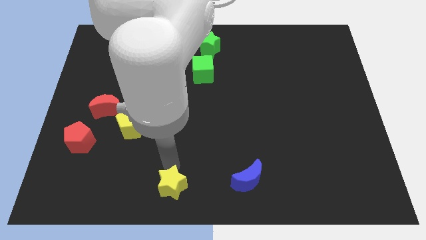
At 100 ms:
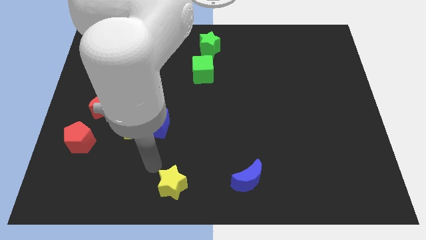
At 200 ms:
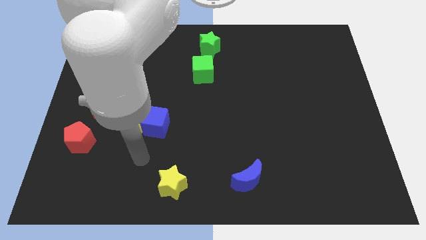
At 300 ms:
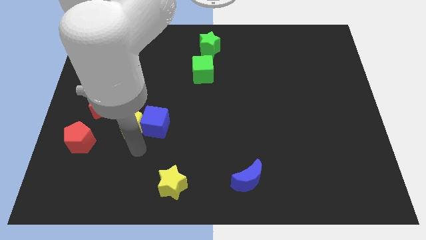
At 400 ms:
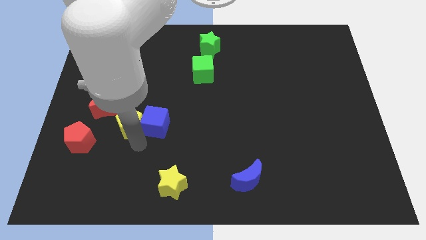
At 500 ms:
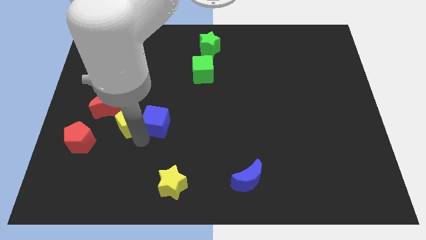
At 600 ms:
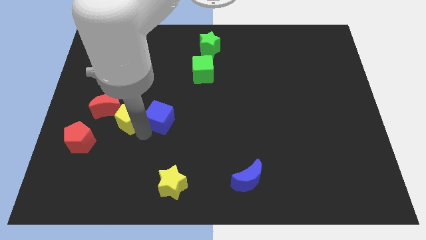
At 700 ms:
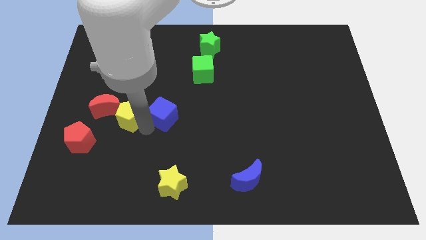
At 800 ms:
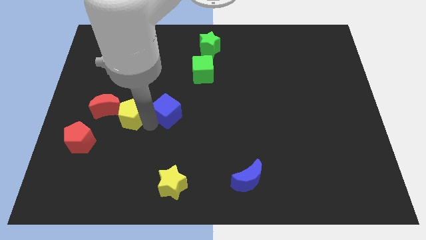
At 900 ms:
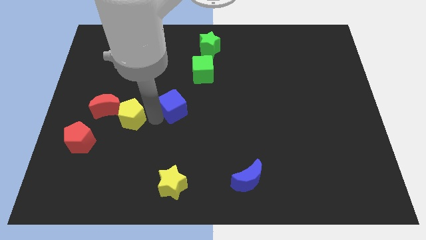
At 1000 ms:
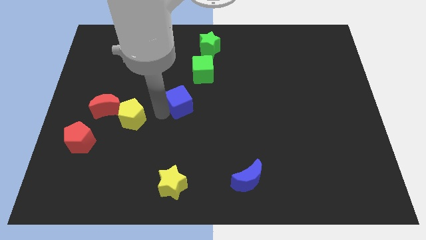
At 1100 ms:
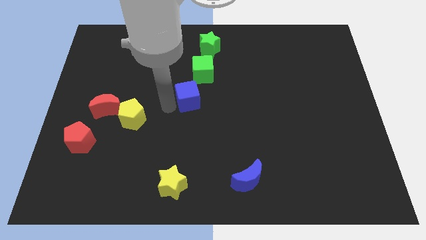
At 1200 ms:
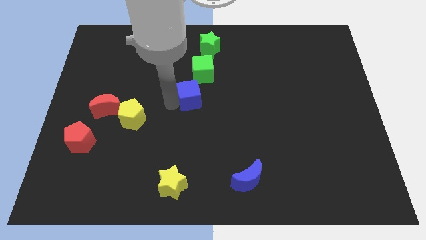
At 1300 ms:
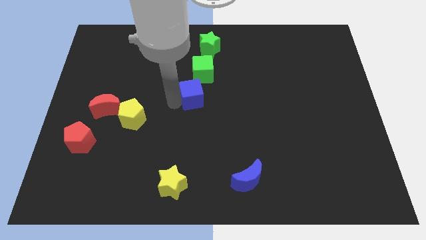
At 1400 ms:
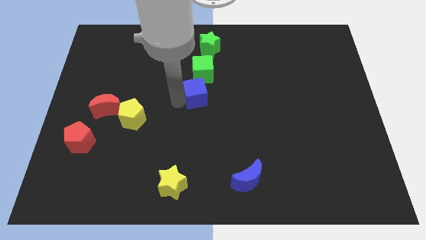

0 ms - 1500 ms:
push the blue cube and place it below the green cube

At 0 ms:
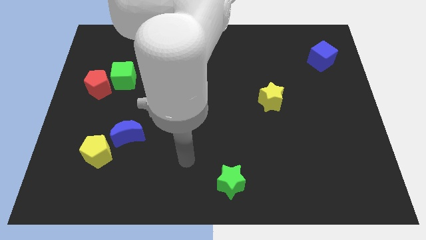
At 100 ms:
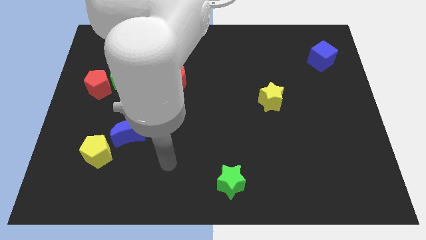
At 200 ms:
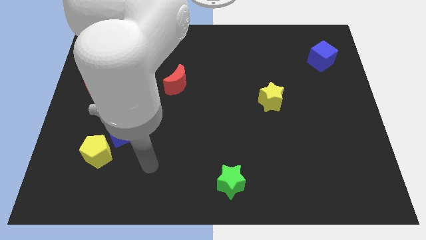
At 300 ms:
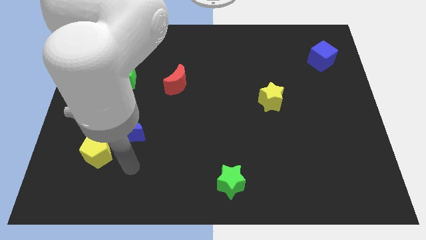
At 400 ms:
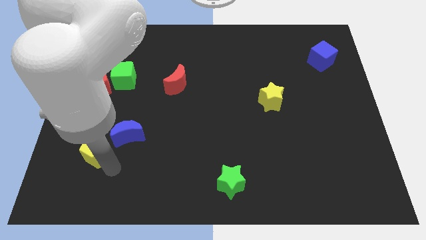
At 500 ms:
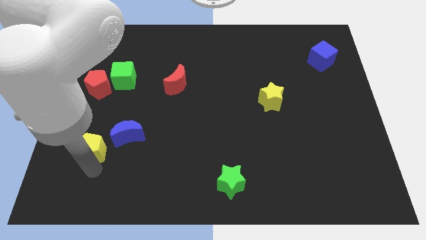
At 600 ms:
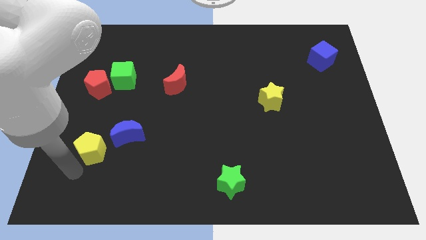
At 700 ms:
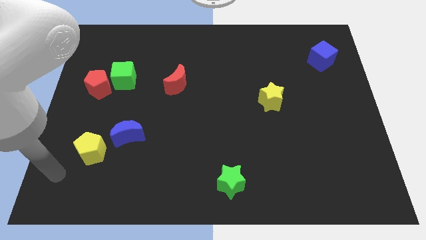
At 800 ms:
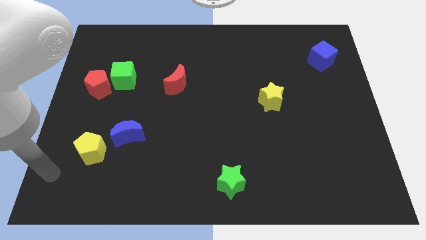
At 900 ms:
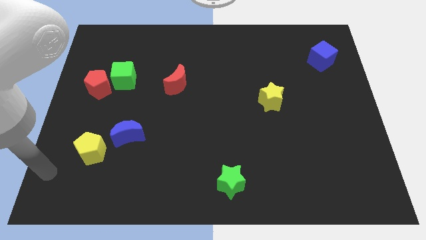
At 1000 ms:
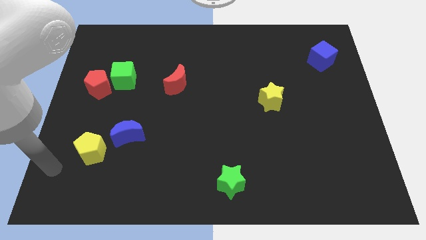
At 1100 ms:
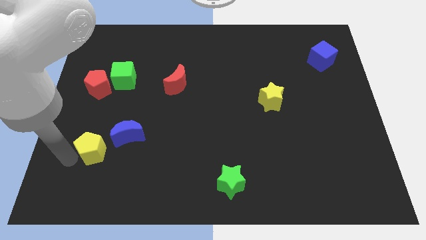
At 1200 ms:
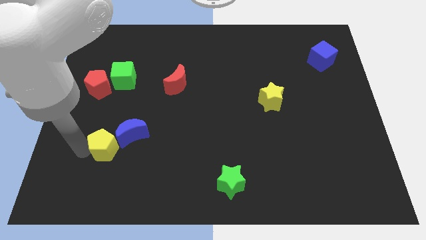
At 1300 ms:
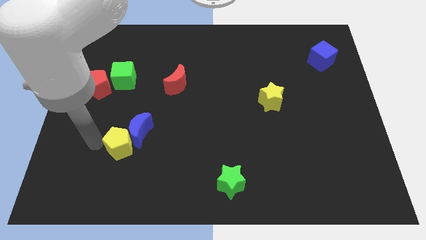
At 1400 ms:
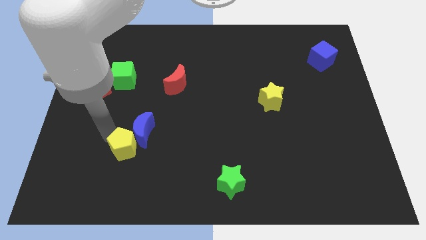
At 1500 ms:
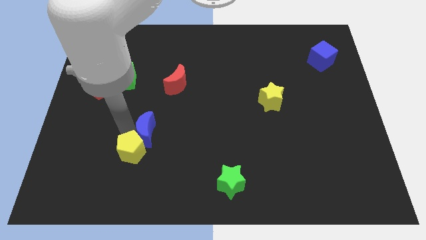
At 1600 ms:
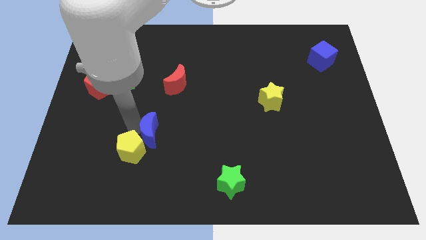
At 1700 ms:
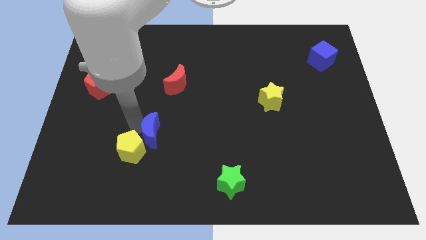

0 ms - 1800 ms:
push the yellow pentagon into the blue moon

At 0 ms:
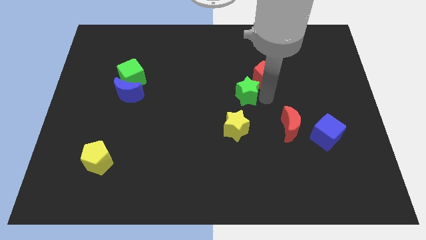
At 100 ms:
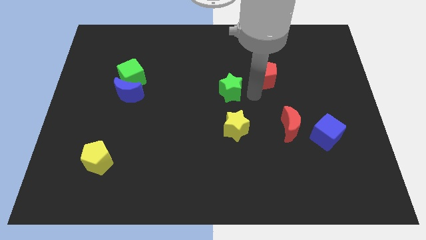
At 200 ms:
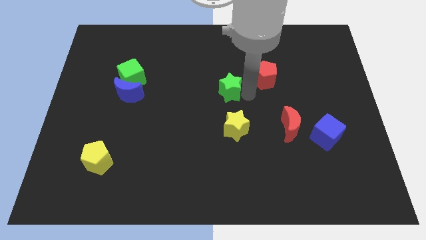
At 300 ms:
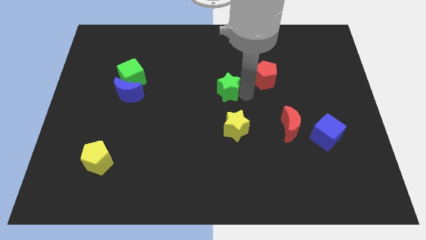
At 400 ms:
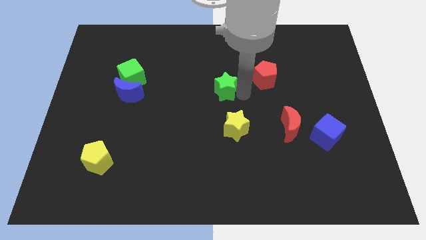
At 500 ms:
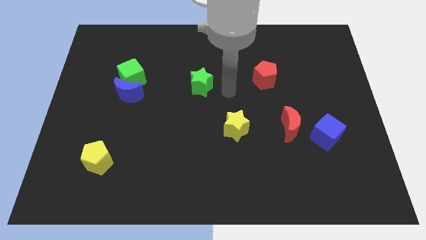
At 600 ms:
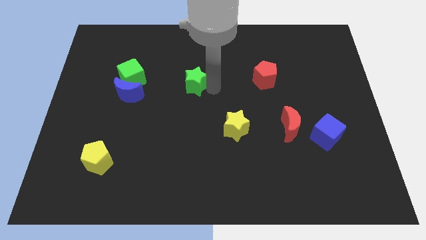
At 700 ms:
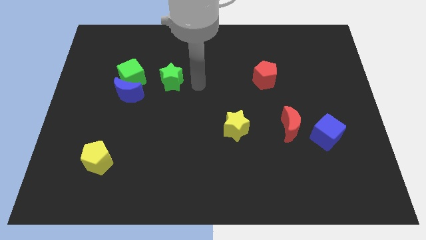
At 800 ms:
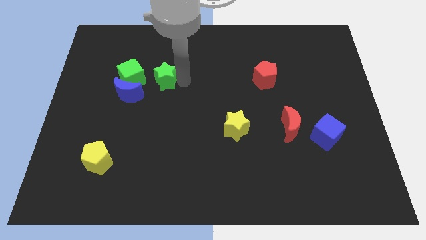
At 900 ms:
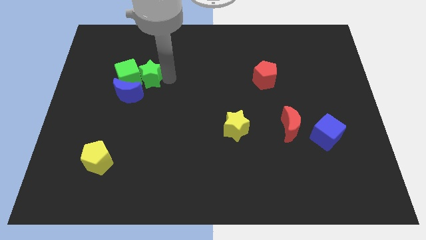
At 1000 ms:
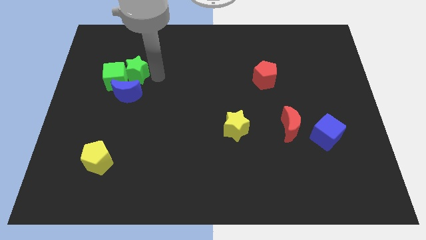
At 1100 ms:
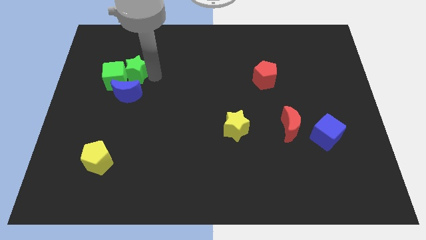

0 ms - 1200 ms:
slide the green star into the green cube

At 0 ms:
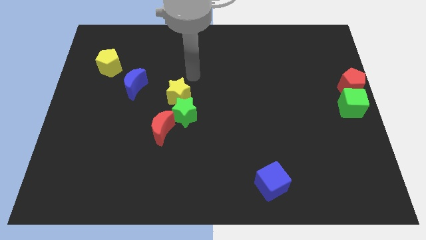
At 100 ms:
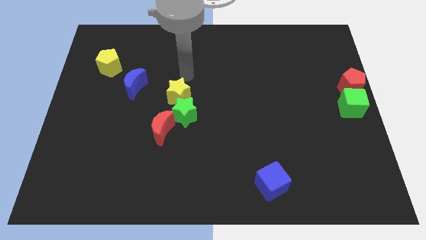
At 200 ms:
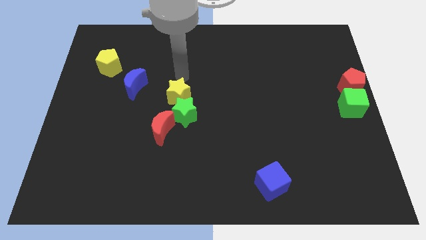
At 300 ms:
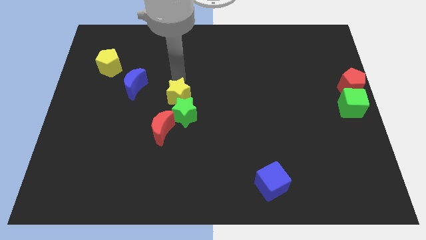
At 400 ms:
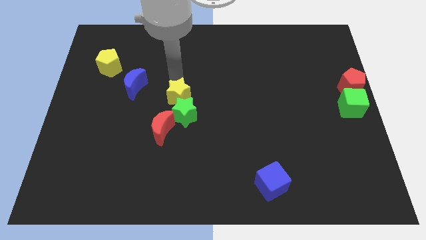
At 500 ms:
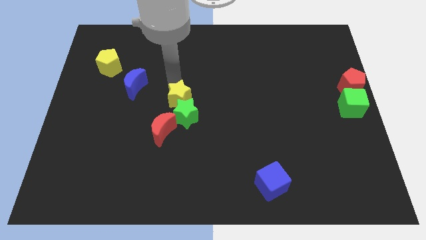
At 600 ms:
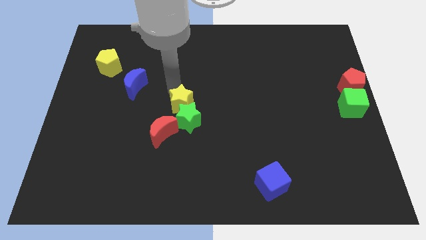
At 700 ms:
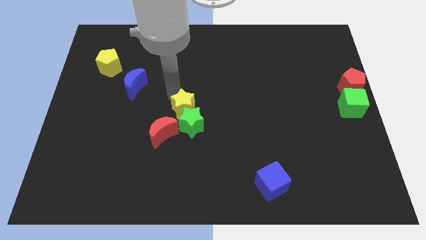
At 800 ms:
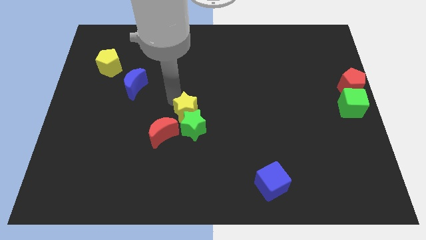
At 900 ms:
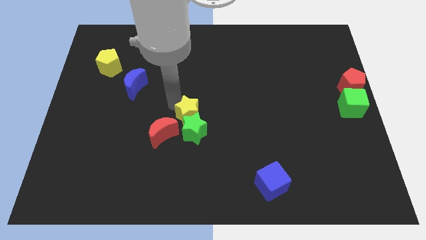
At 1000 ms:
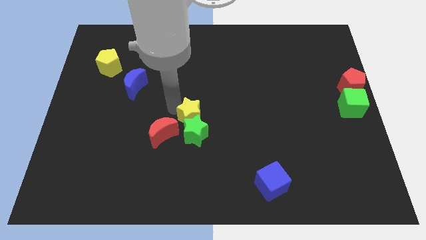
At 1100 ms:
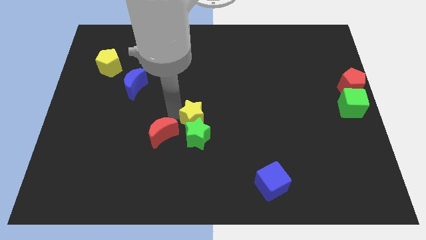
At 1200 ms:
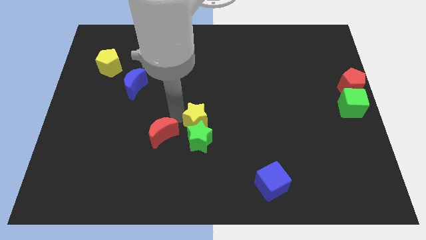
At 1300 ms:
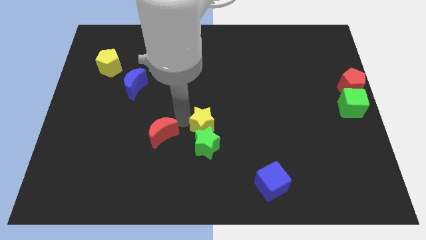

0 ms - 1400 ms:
push the yellow star into the green star

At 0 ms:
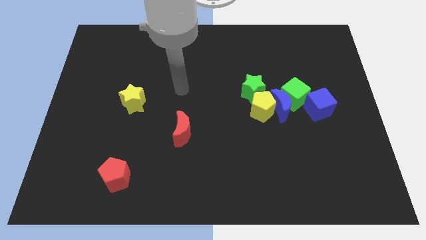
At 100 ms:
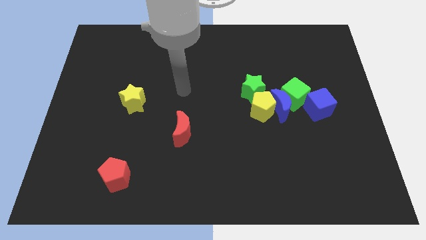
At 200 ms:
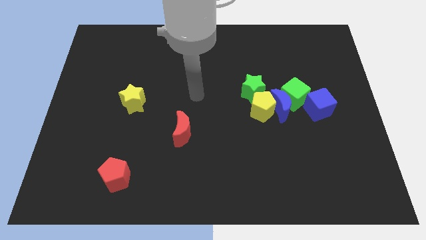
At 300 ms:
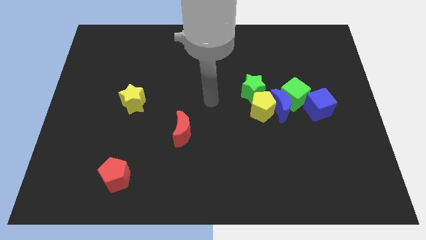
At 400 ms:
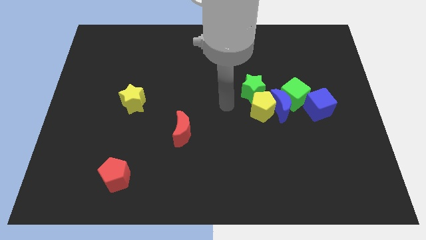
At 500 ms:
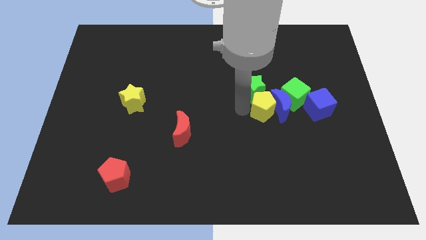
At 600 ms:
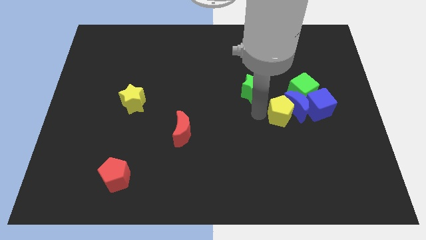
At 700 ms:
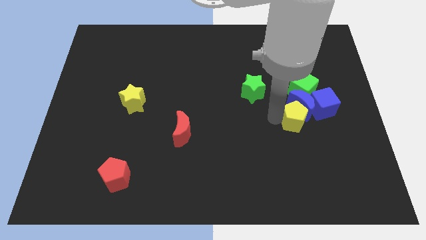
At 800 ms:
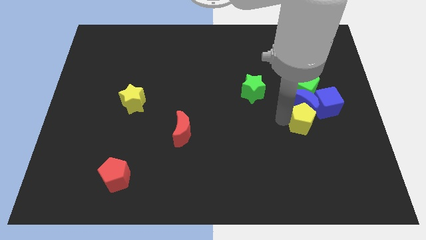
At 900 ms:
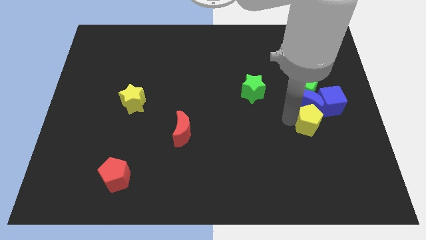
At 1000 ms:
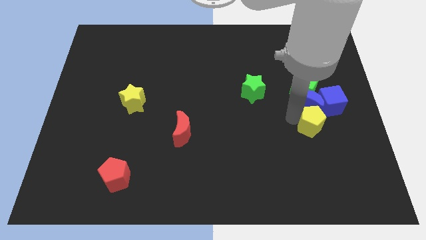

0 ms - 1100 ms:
push the yellow pentagon to the bottom of the blue crescent

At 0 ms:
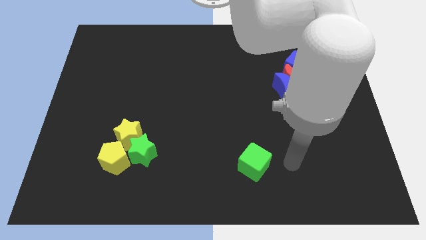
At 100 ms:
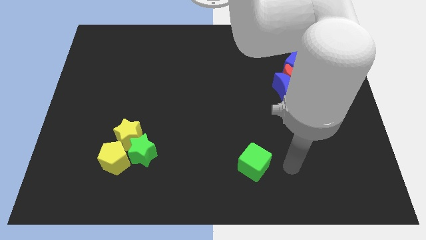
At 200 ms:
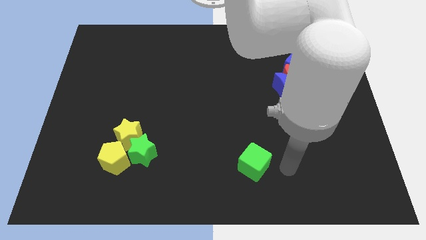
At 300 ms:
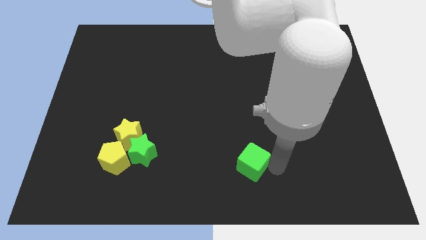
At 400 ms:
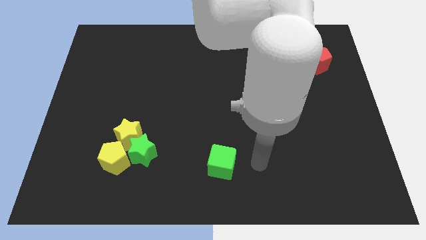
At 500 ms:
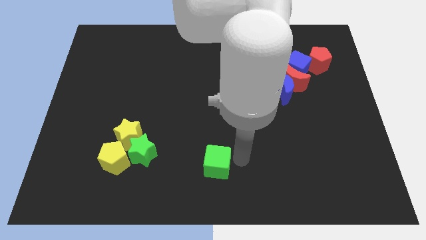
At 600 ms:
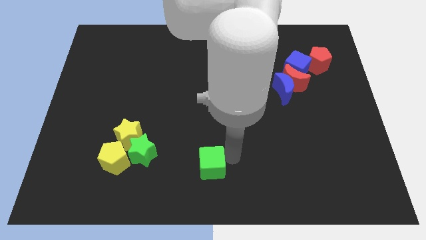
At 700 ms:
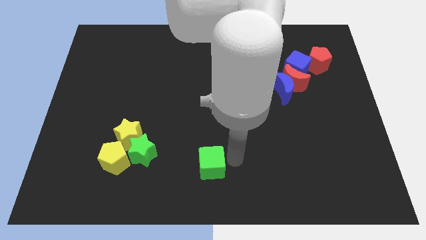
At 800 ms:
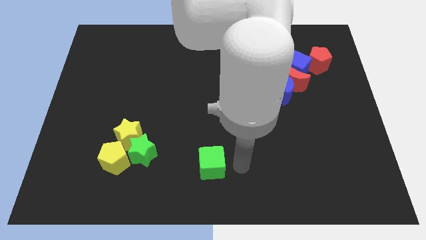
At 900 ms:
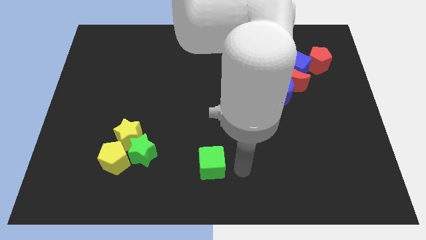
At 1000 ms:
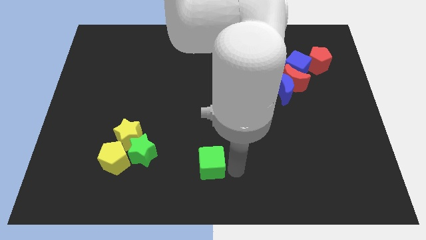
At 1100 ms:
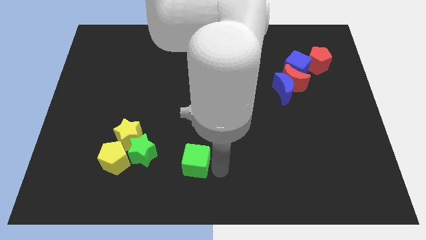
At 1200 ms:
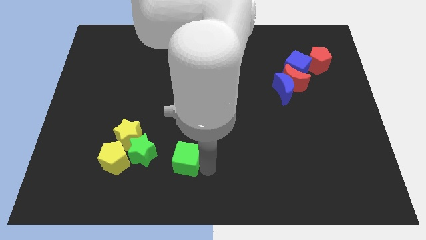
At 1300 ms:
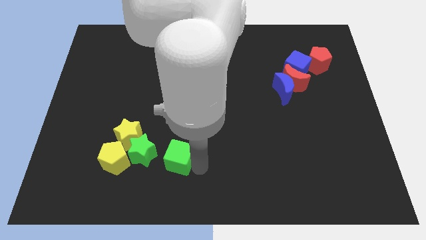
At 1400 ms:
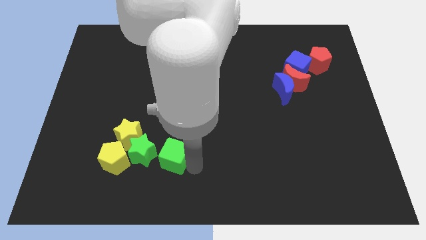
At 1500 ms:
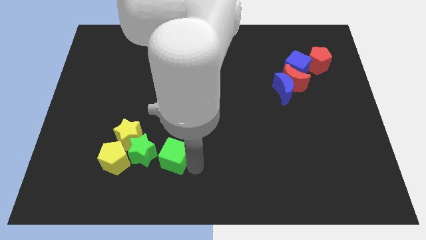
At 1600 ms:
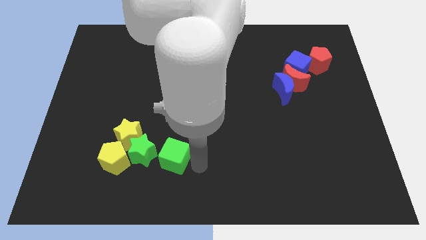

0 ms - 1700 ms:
slide the green cube close to the green star
